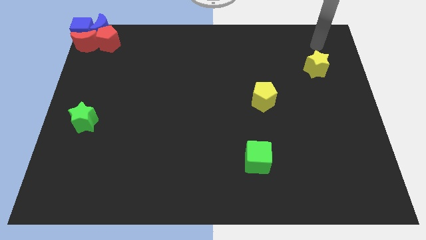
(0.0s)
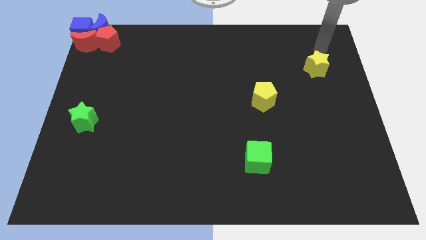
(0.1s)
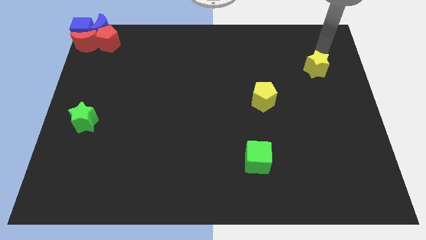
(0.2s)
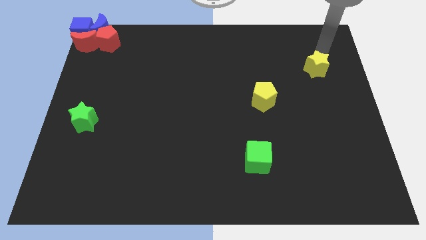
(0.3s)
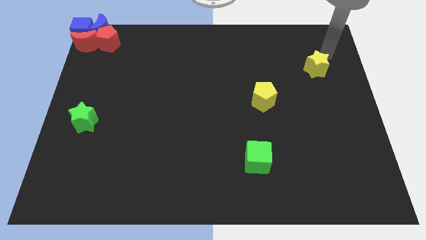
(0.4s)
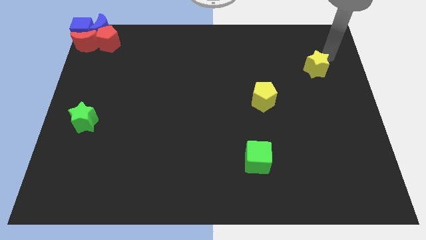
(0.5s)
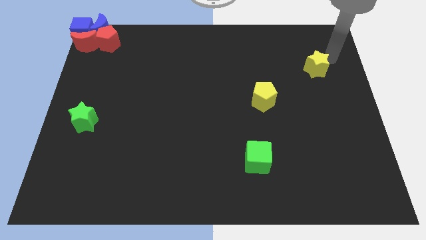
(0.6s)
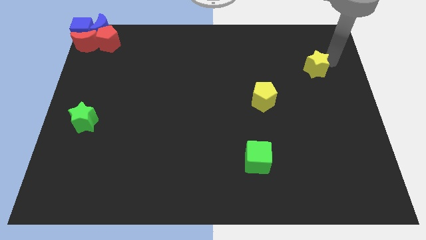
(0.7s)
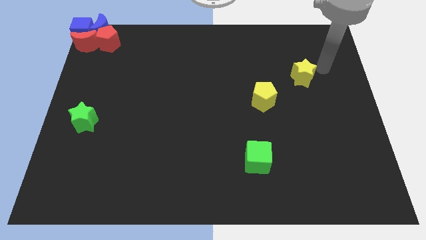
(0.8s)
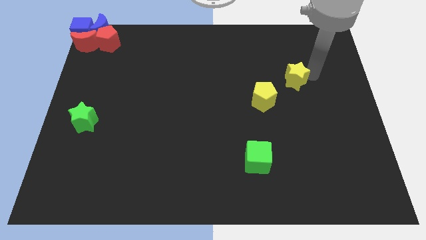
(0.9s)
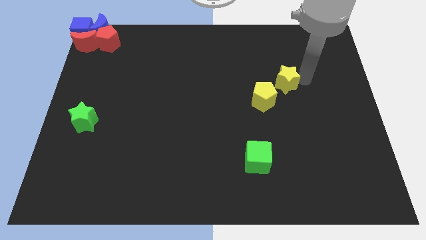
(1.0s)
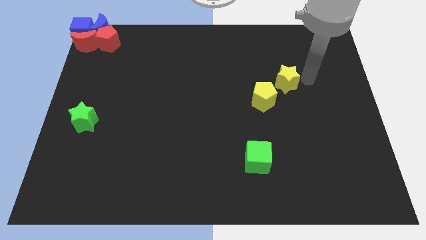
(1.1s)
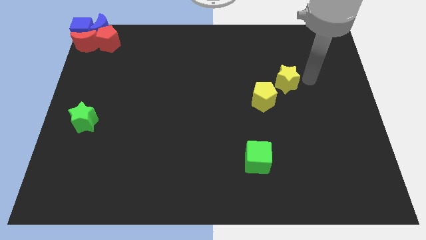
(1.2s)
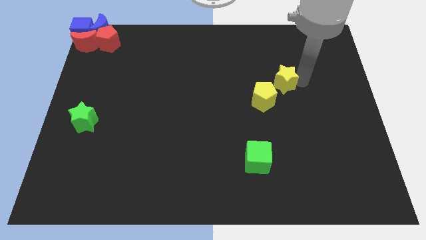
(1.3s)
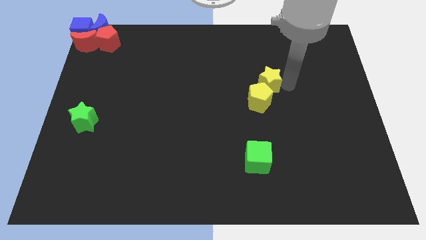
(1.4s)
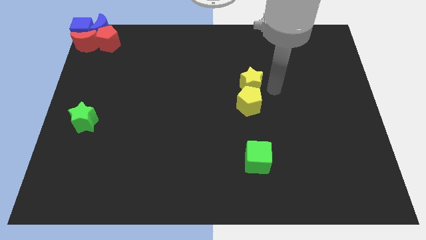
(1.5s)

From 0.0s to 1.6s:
push the yellow star to the top of the yellow pentagon

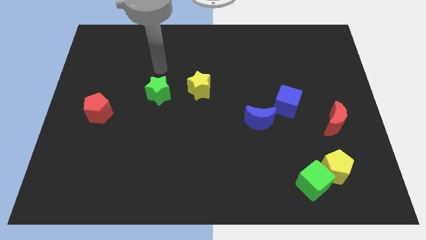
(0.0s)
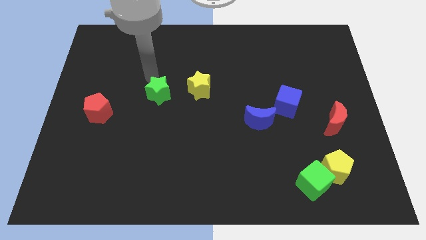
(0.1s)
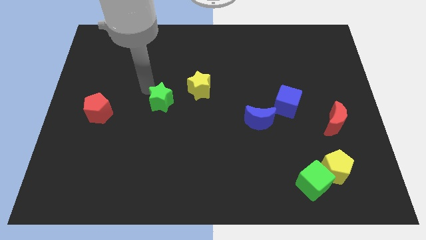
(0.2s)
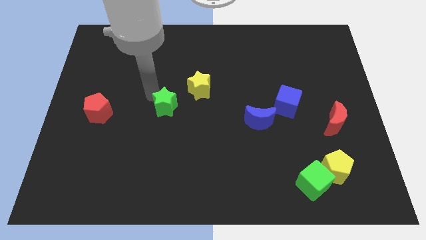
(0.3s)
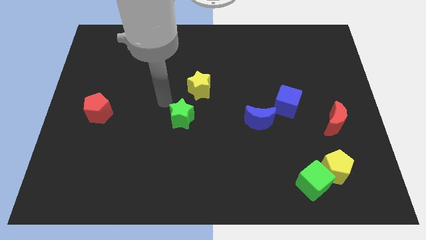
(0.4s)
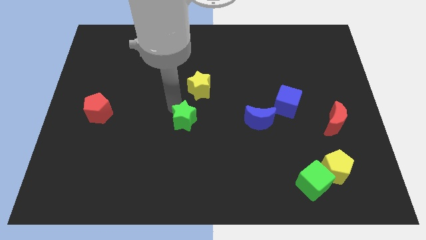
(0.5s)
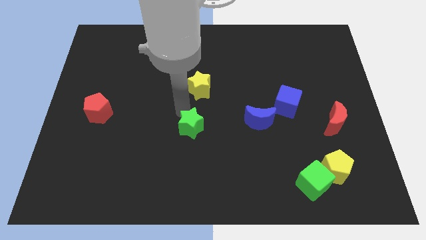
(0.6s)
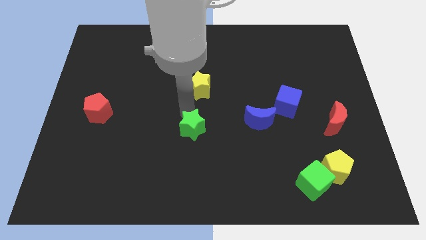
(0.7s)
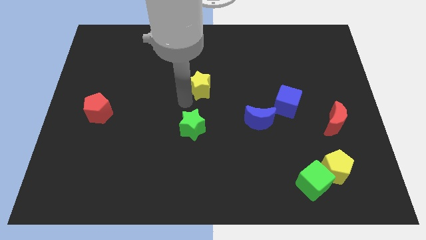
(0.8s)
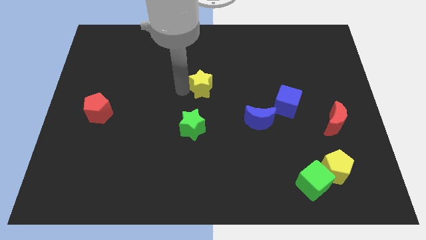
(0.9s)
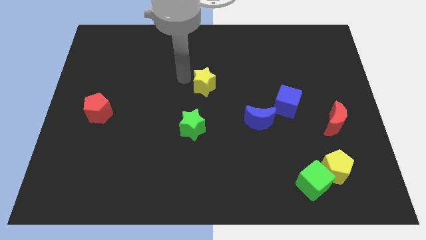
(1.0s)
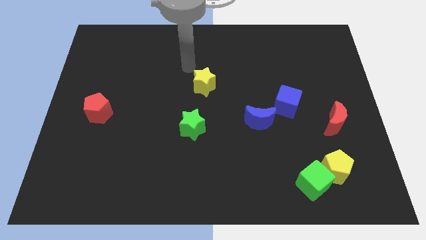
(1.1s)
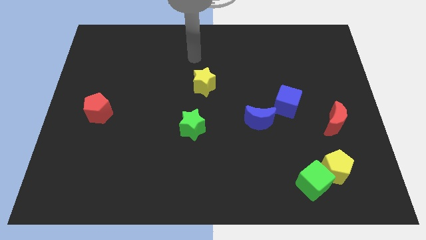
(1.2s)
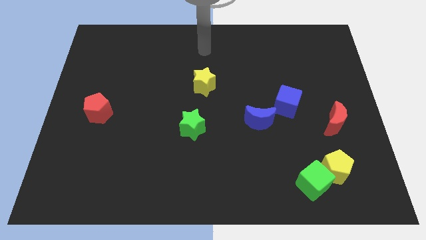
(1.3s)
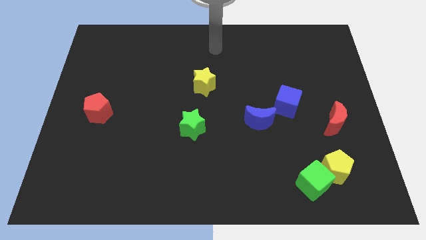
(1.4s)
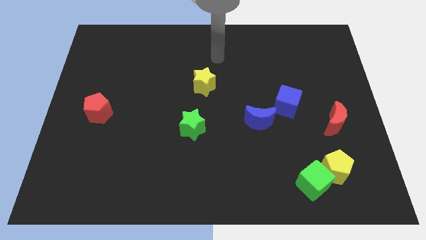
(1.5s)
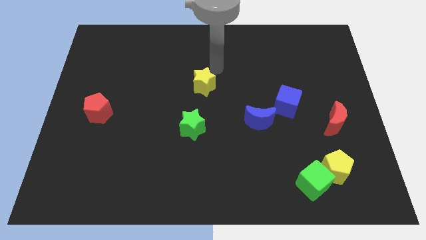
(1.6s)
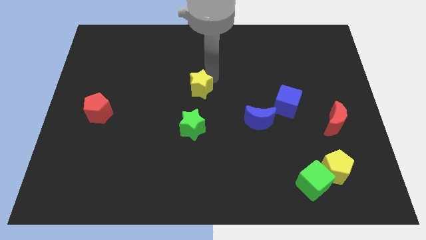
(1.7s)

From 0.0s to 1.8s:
move green star below yellow star

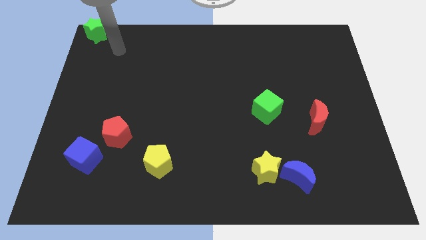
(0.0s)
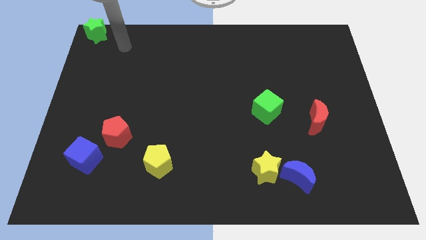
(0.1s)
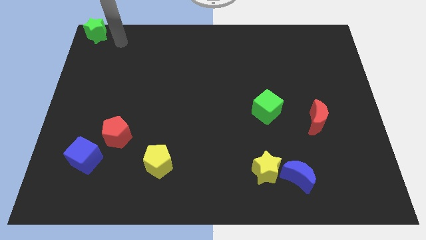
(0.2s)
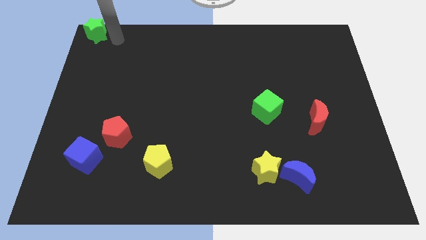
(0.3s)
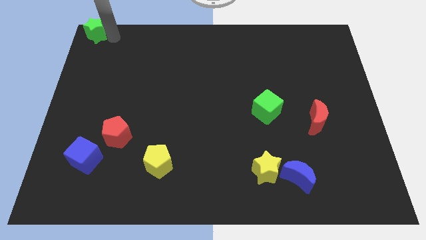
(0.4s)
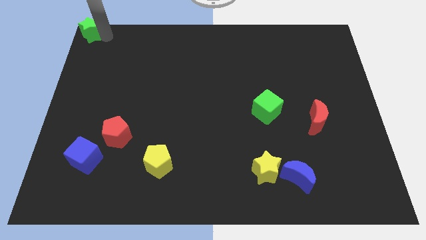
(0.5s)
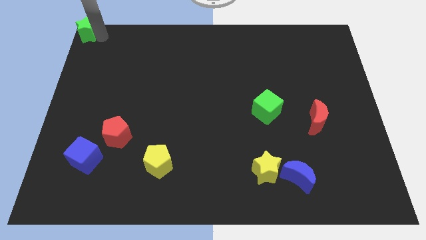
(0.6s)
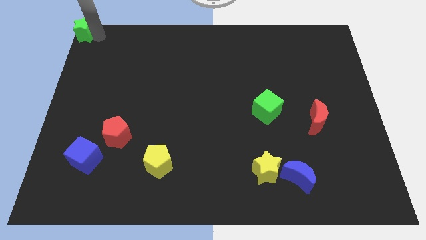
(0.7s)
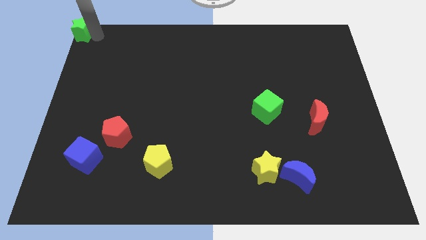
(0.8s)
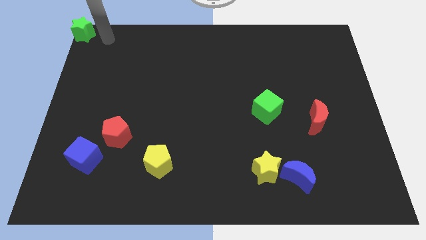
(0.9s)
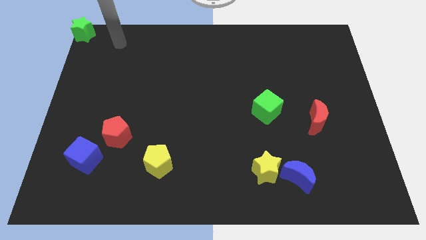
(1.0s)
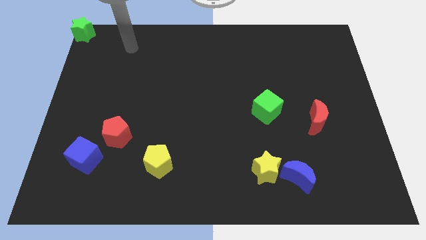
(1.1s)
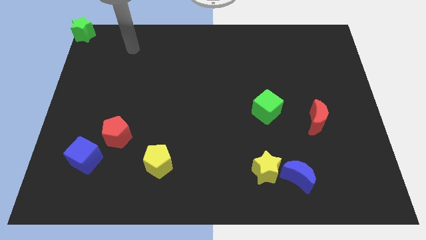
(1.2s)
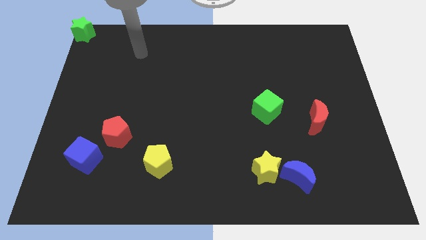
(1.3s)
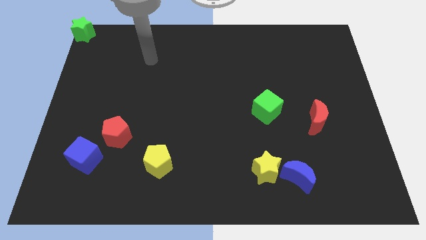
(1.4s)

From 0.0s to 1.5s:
move your arm away from green star

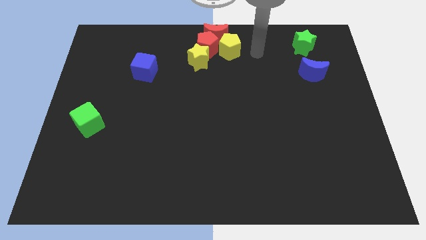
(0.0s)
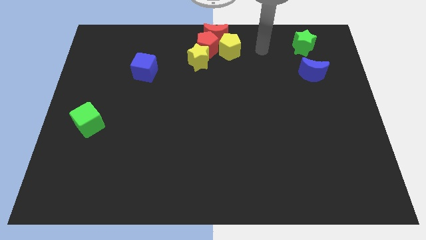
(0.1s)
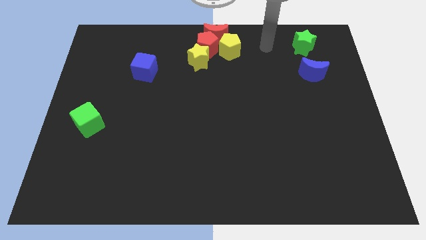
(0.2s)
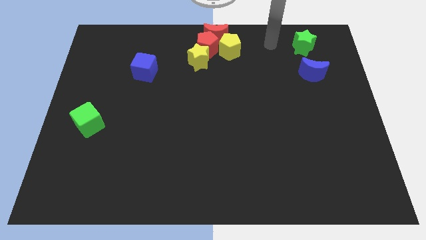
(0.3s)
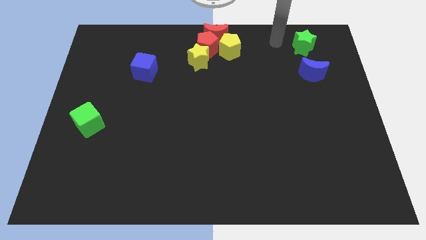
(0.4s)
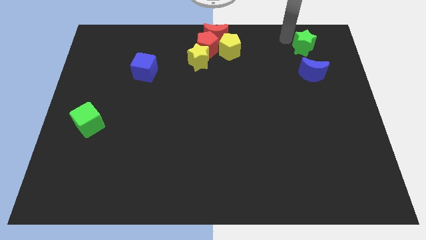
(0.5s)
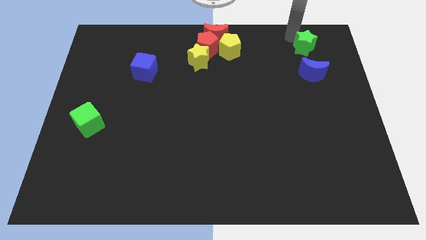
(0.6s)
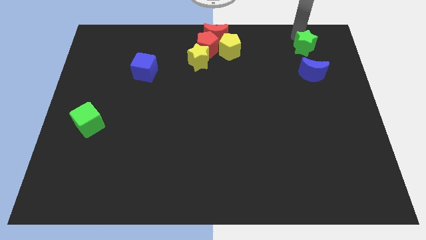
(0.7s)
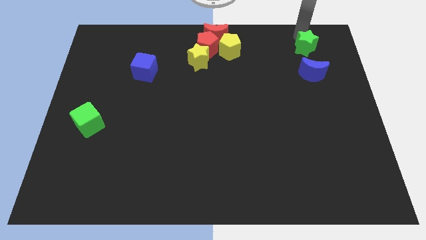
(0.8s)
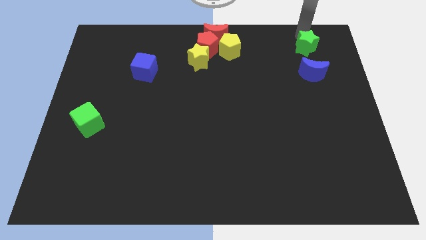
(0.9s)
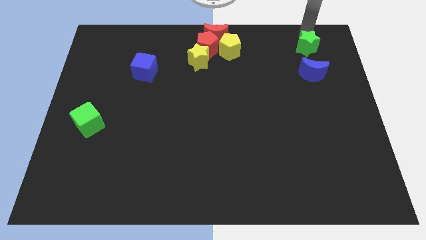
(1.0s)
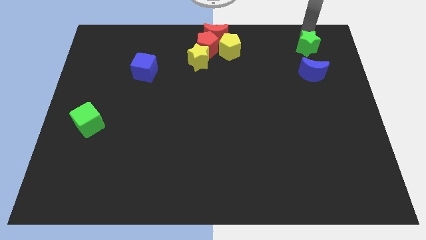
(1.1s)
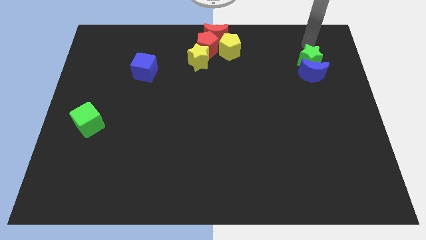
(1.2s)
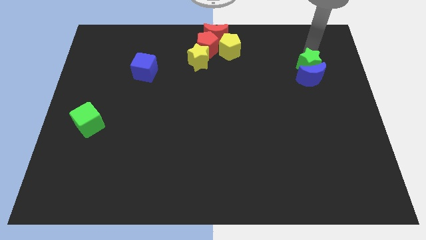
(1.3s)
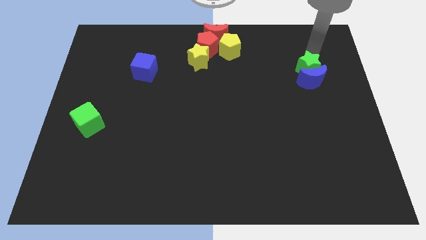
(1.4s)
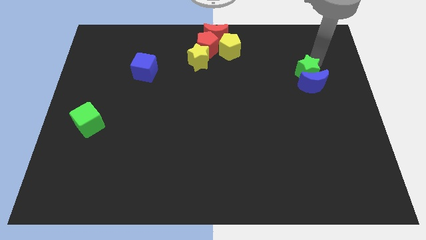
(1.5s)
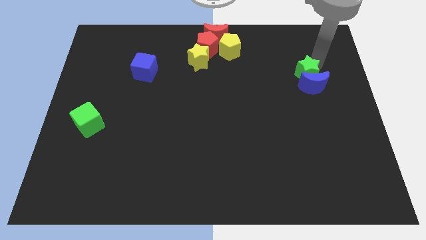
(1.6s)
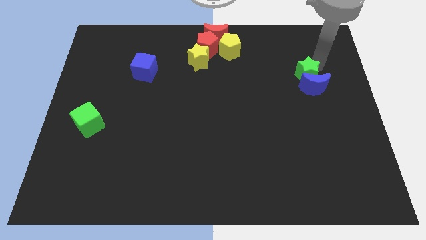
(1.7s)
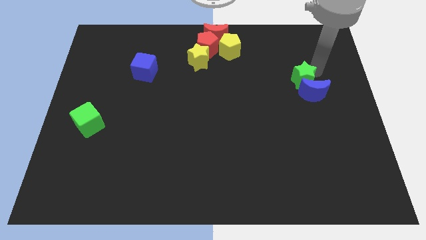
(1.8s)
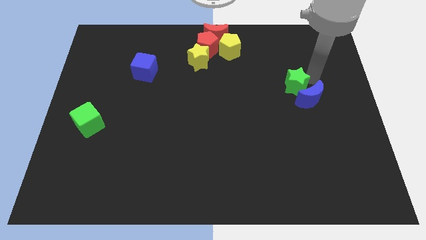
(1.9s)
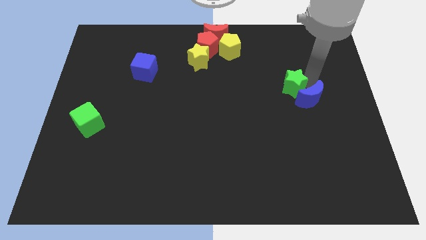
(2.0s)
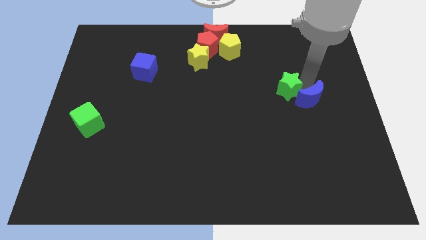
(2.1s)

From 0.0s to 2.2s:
move green star into blue crescent

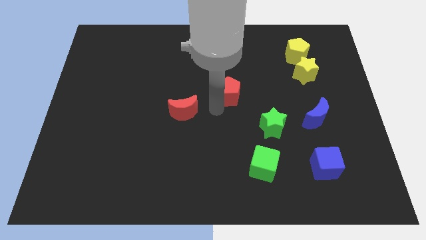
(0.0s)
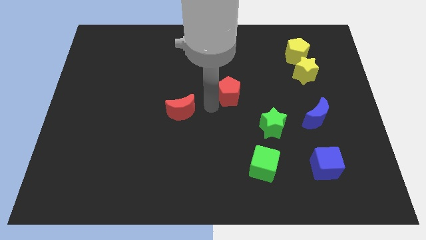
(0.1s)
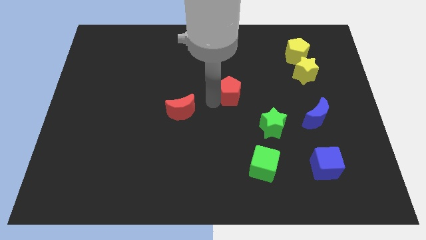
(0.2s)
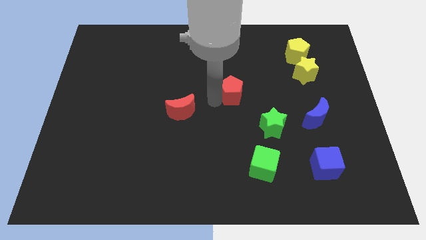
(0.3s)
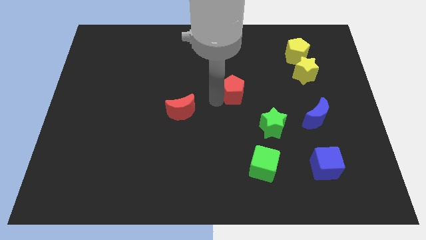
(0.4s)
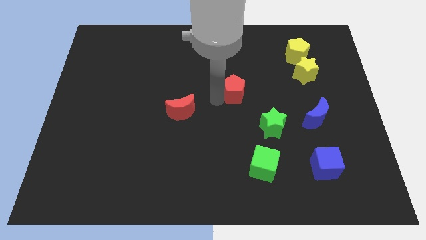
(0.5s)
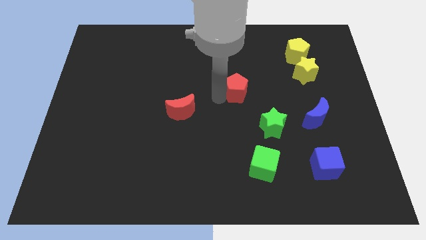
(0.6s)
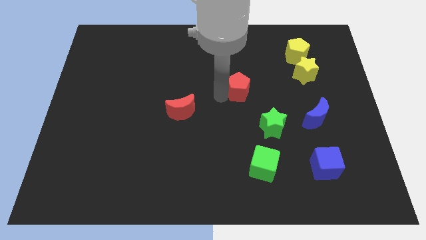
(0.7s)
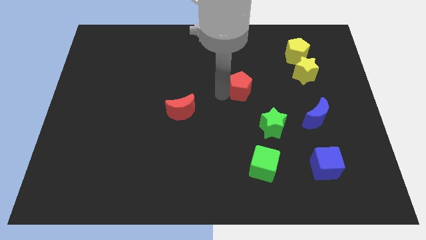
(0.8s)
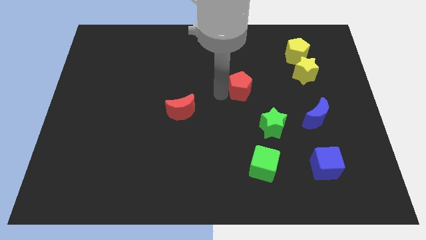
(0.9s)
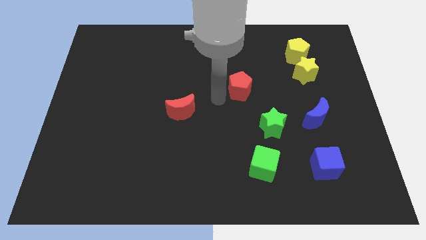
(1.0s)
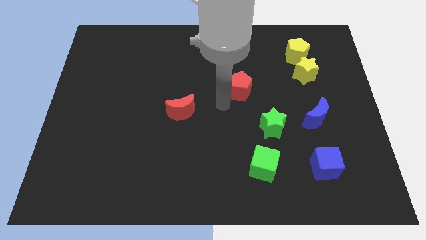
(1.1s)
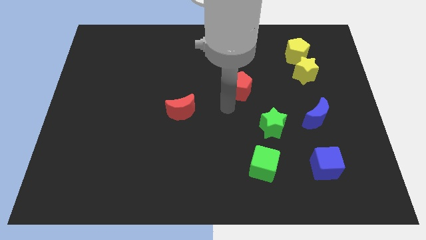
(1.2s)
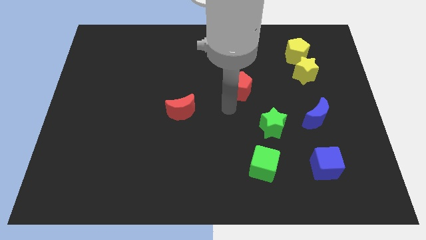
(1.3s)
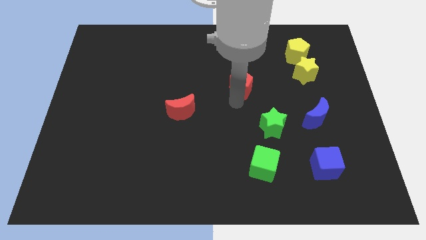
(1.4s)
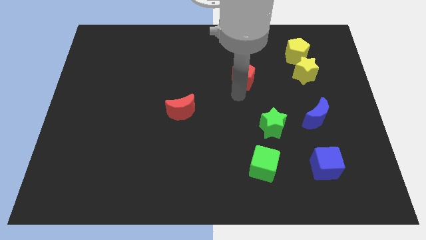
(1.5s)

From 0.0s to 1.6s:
move the red pentagon to the bottom left side of the yellow star

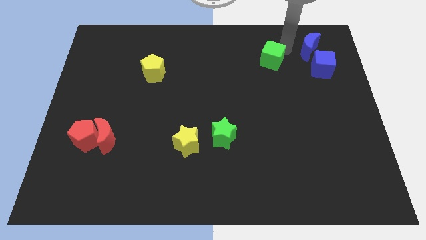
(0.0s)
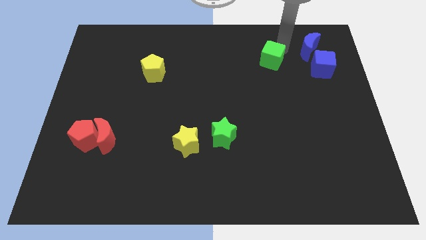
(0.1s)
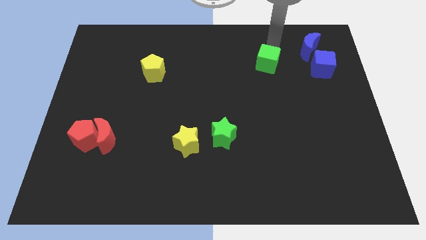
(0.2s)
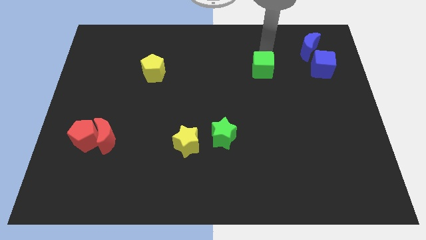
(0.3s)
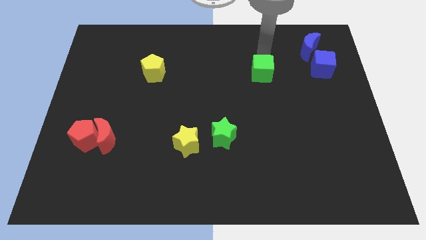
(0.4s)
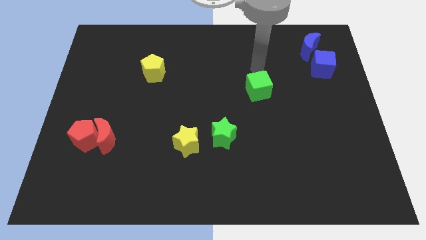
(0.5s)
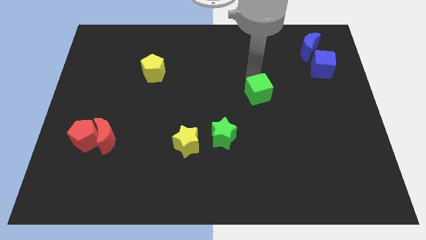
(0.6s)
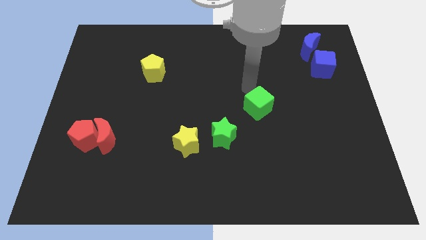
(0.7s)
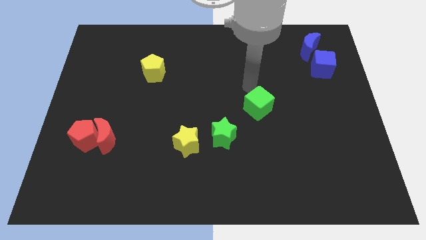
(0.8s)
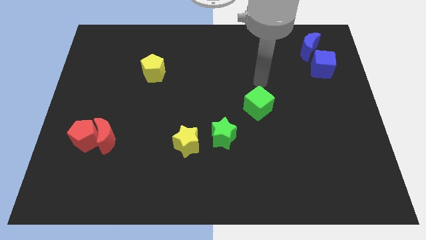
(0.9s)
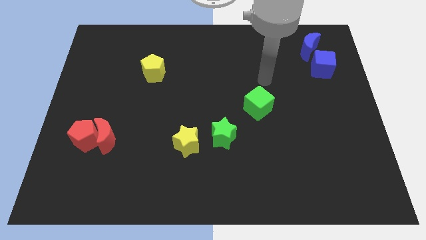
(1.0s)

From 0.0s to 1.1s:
move green cube diagonally
